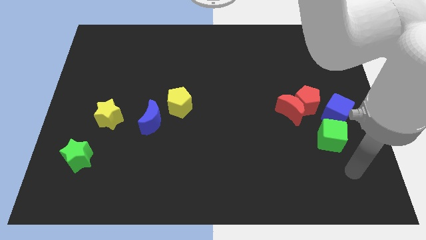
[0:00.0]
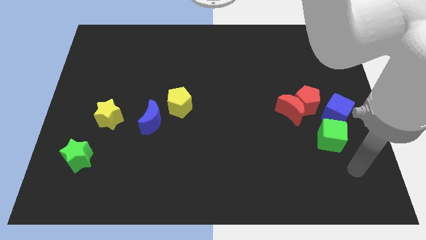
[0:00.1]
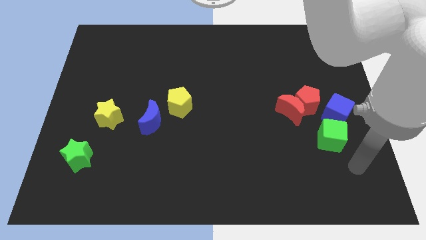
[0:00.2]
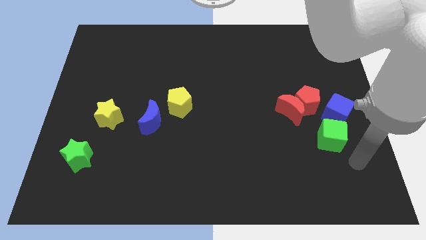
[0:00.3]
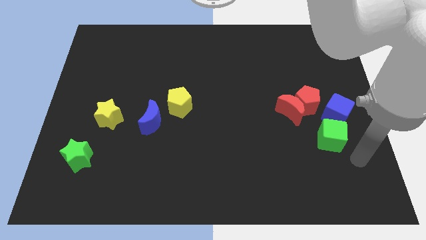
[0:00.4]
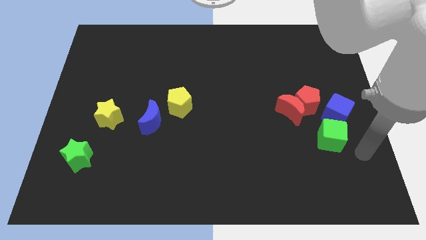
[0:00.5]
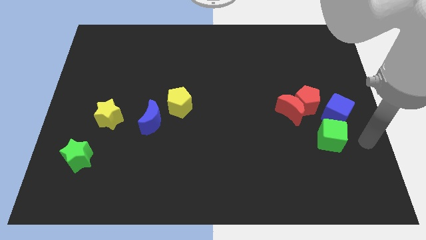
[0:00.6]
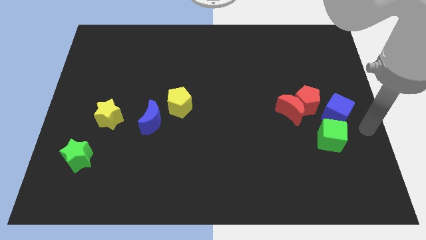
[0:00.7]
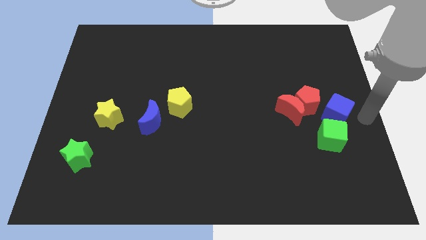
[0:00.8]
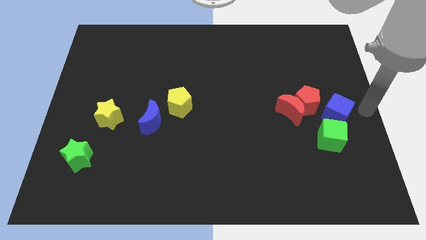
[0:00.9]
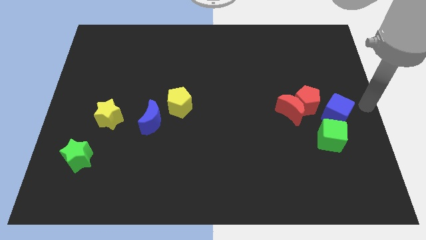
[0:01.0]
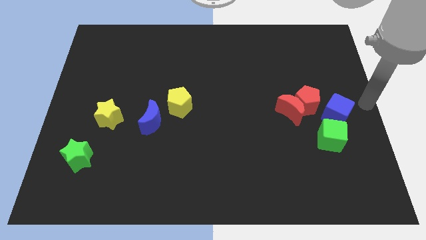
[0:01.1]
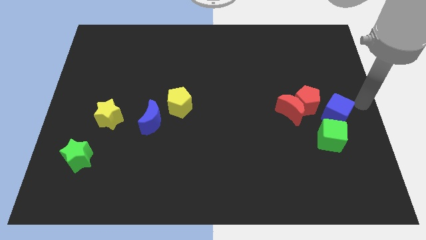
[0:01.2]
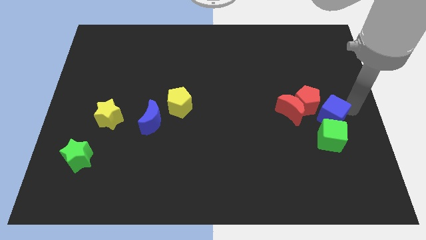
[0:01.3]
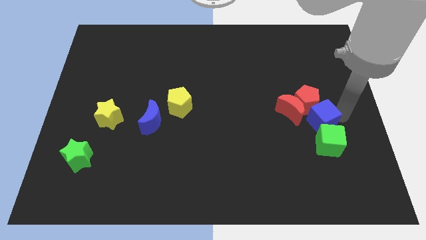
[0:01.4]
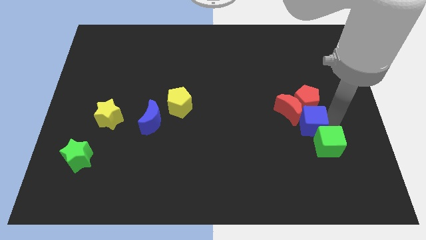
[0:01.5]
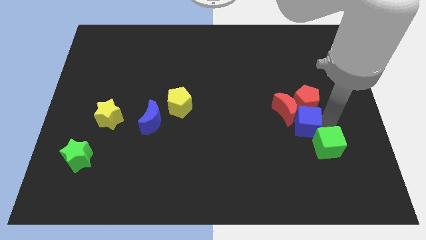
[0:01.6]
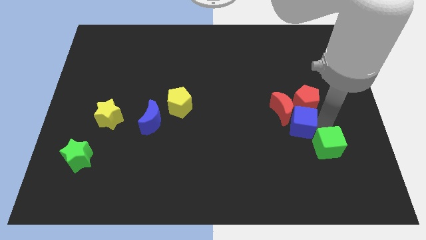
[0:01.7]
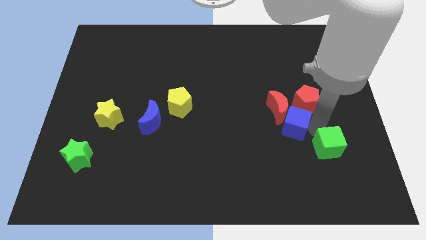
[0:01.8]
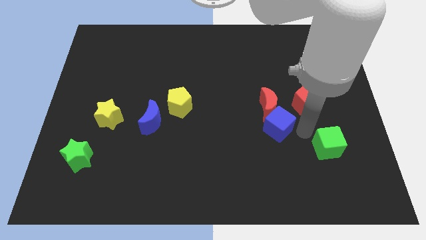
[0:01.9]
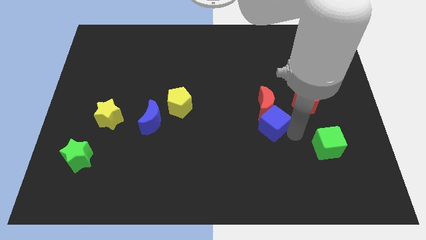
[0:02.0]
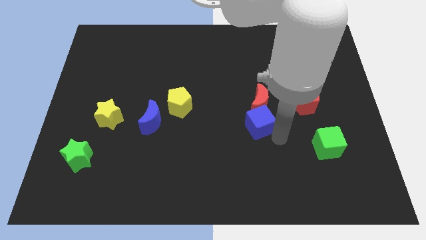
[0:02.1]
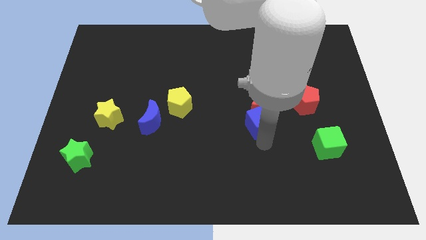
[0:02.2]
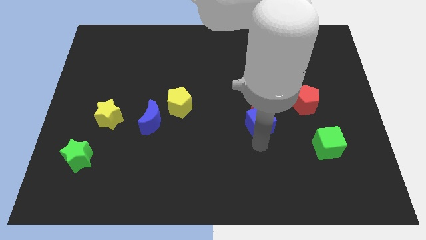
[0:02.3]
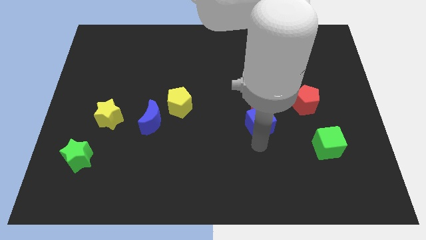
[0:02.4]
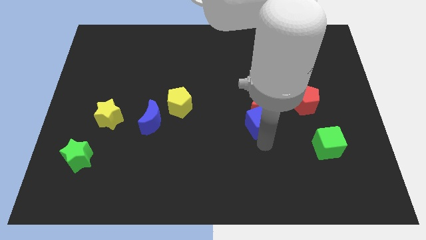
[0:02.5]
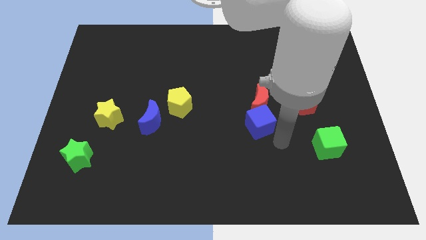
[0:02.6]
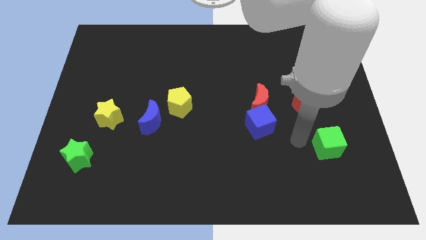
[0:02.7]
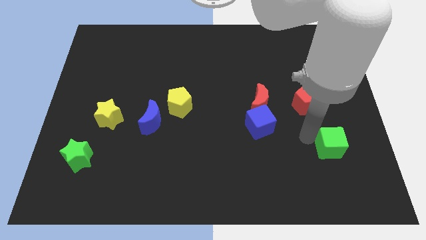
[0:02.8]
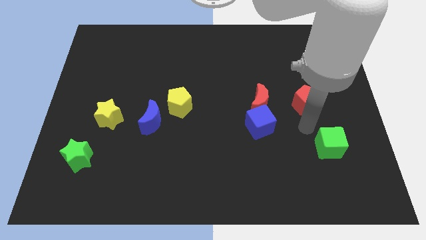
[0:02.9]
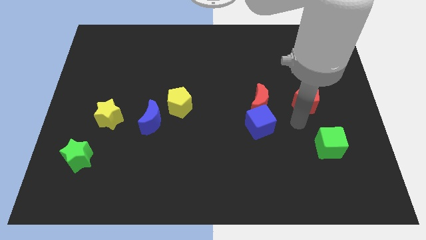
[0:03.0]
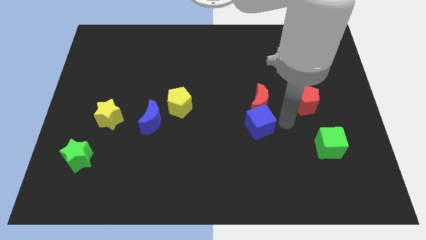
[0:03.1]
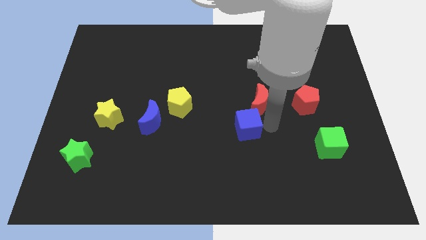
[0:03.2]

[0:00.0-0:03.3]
move the blue cube below the red moon

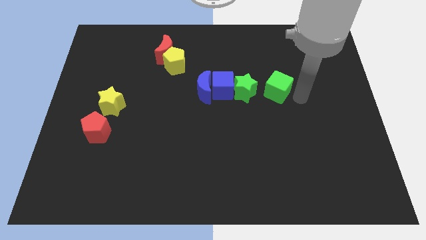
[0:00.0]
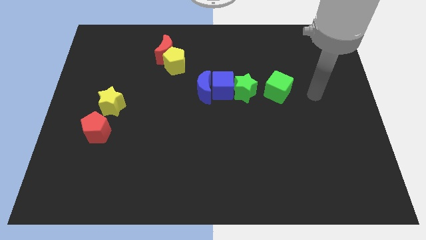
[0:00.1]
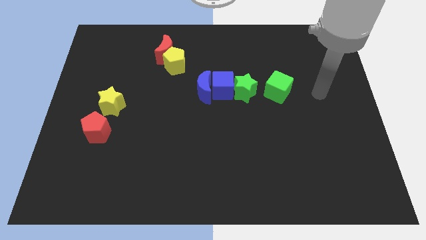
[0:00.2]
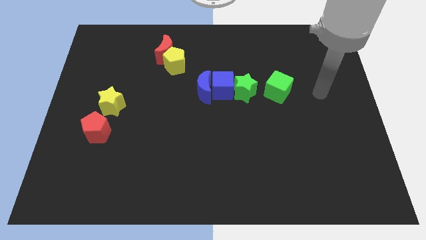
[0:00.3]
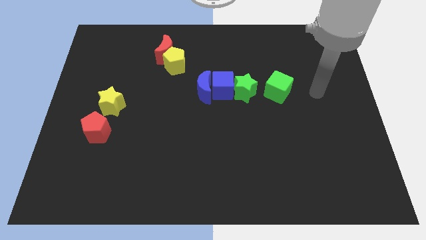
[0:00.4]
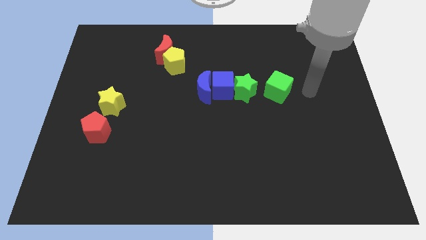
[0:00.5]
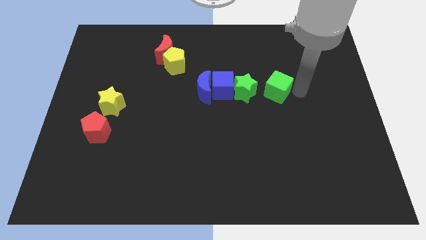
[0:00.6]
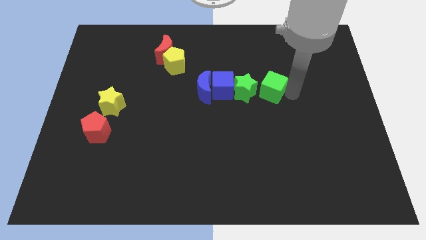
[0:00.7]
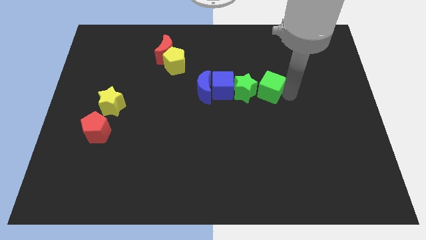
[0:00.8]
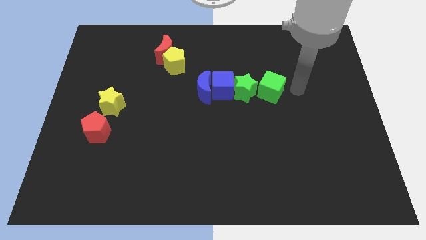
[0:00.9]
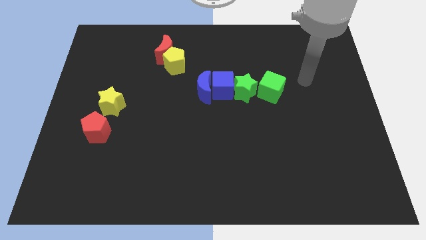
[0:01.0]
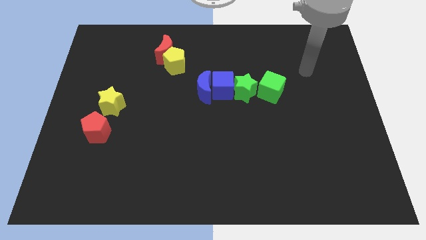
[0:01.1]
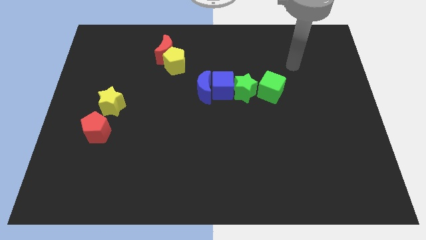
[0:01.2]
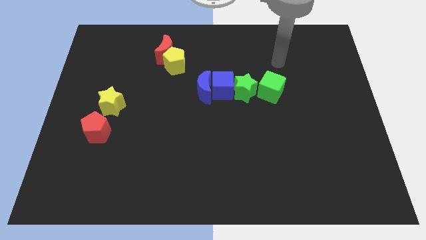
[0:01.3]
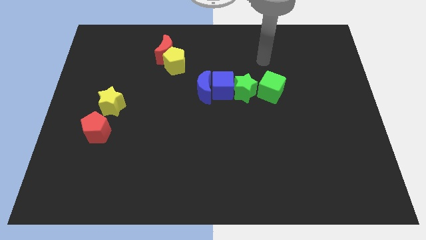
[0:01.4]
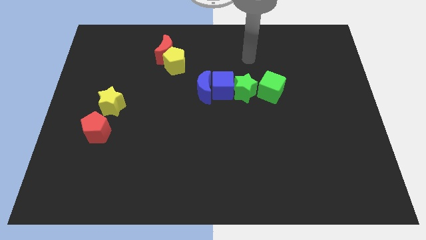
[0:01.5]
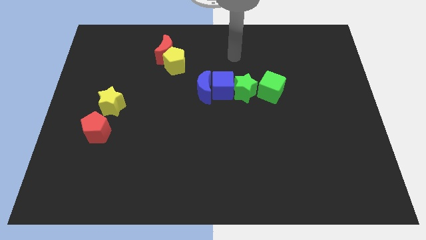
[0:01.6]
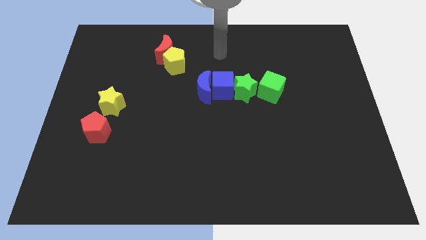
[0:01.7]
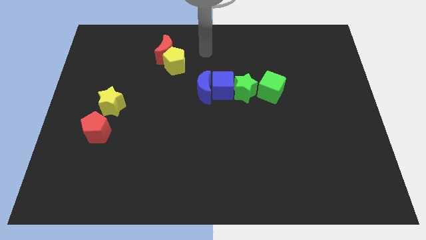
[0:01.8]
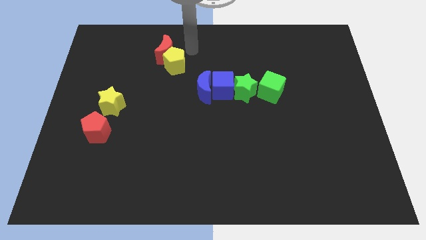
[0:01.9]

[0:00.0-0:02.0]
place the green cube to the right of the green star

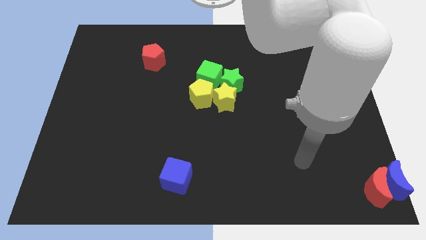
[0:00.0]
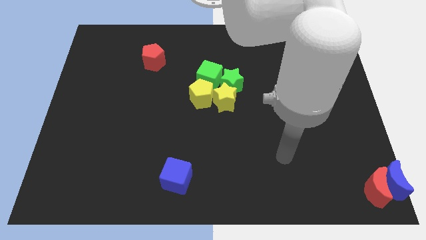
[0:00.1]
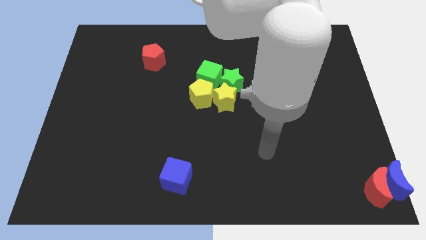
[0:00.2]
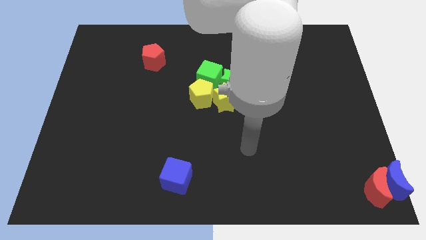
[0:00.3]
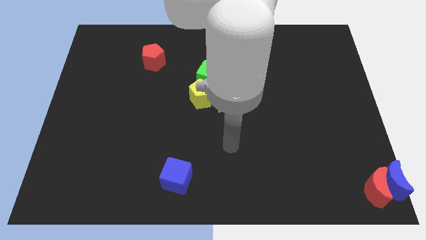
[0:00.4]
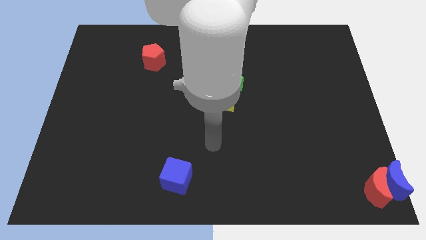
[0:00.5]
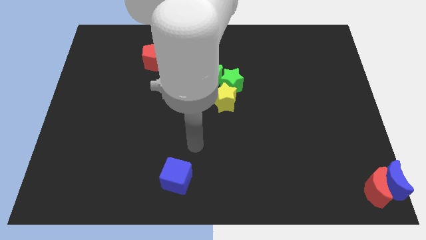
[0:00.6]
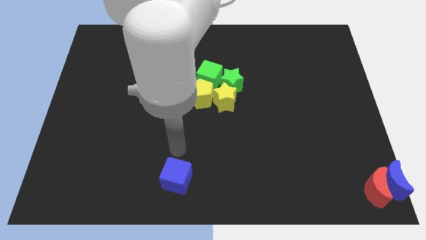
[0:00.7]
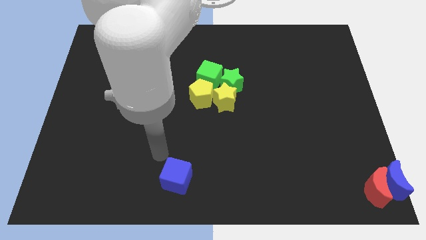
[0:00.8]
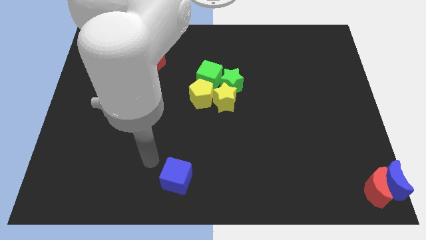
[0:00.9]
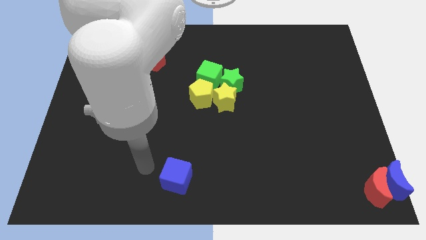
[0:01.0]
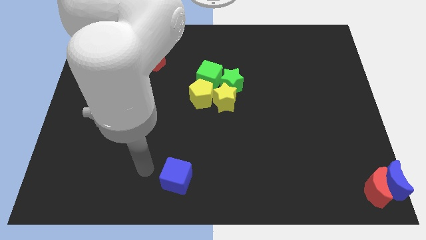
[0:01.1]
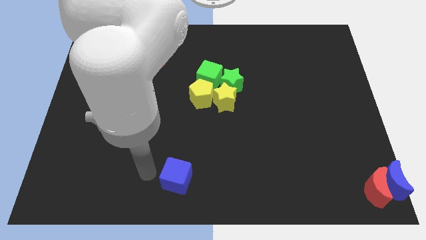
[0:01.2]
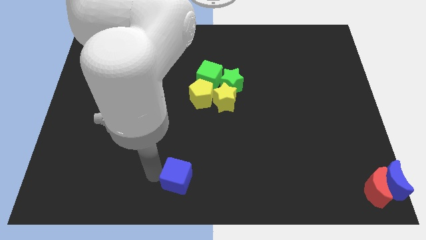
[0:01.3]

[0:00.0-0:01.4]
slide your arm to the left of the blue cube

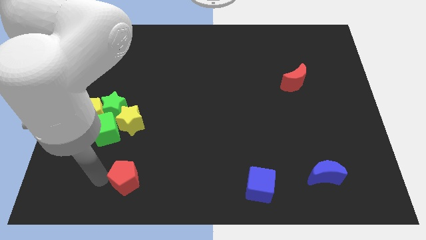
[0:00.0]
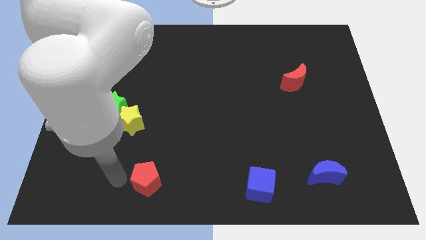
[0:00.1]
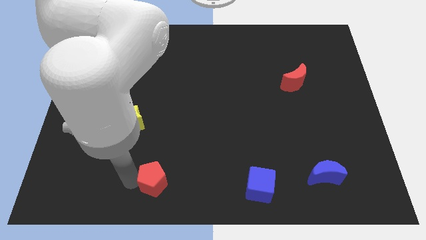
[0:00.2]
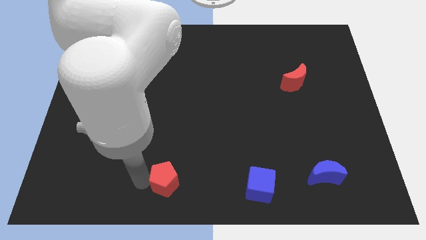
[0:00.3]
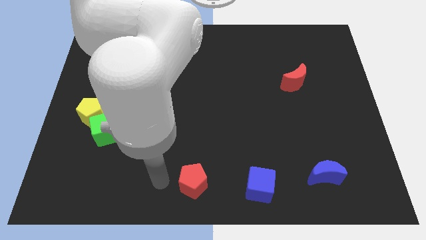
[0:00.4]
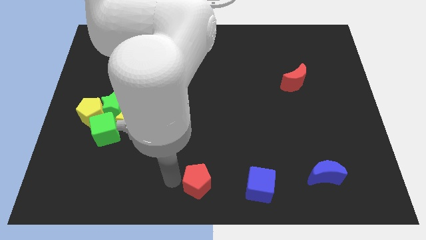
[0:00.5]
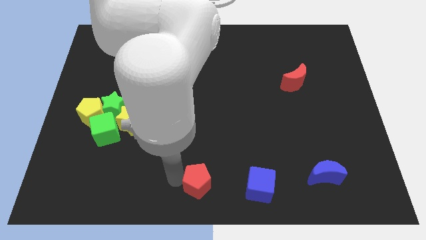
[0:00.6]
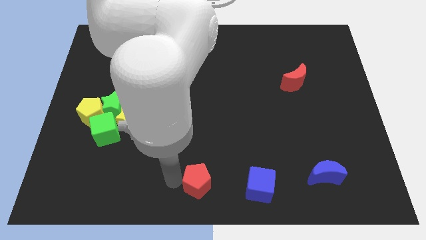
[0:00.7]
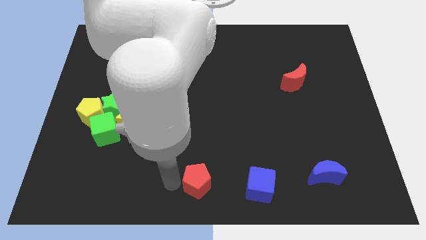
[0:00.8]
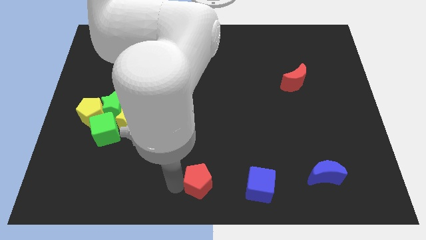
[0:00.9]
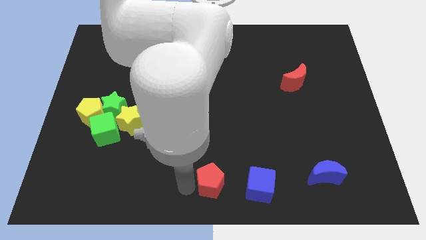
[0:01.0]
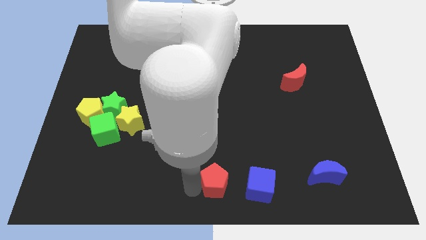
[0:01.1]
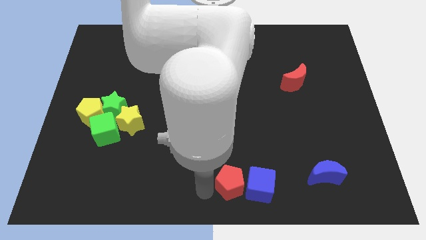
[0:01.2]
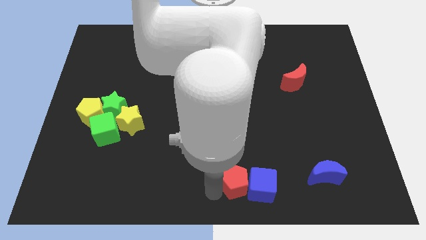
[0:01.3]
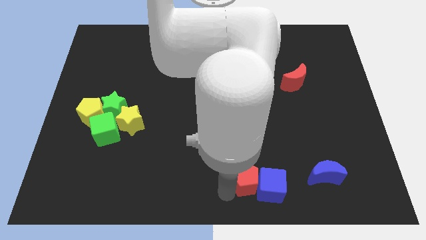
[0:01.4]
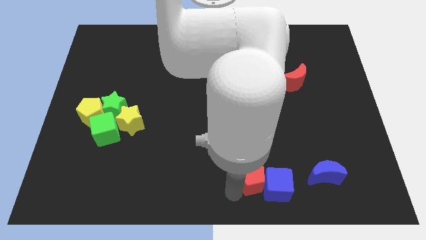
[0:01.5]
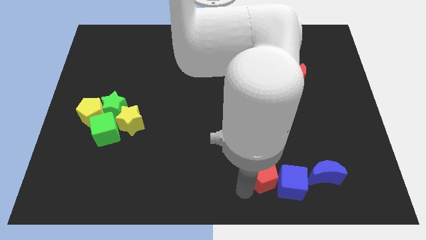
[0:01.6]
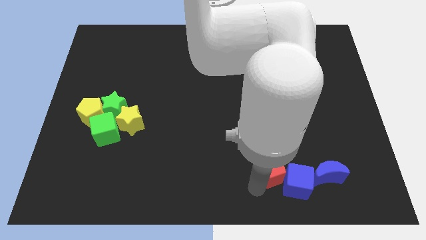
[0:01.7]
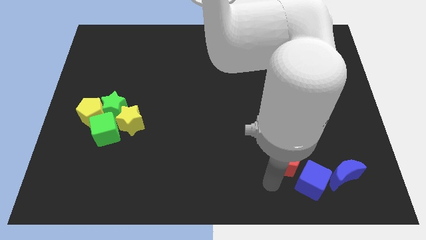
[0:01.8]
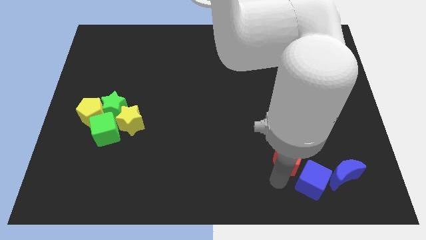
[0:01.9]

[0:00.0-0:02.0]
move the red red pentagon to the right side of the blue cube

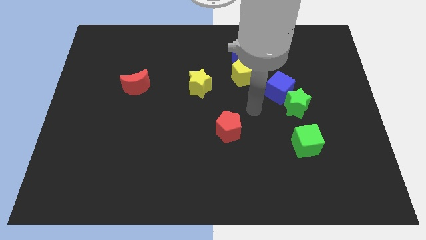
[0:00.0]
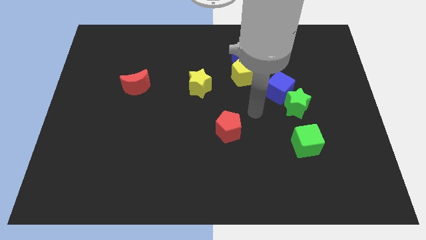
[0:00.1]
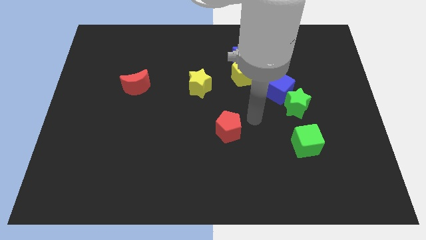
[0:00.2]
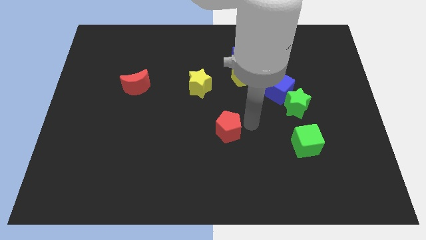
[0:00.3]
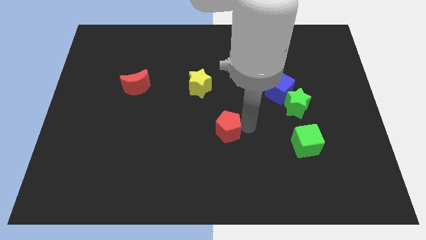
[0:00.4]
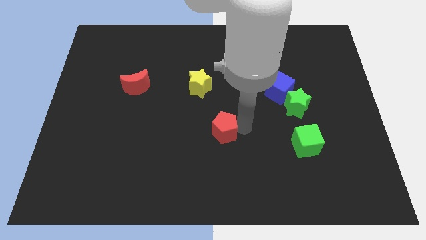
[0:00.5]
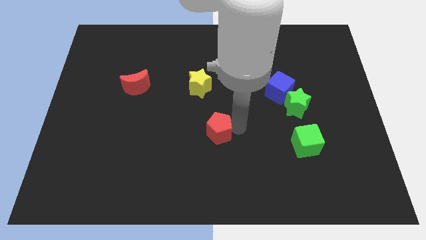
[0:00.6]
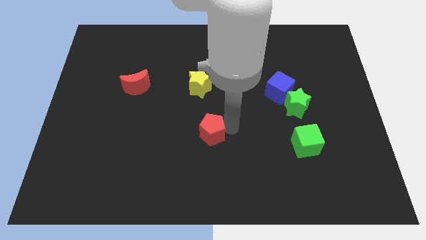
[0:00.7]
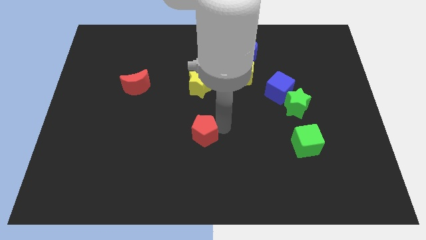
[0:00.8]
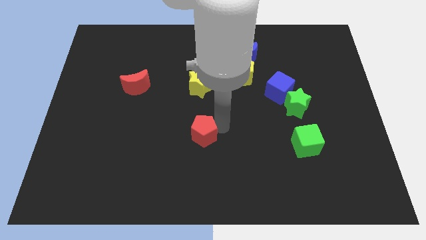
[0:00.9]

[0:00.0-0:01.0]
move the red pentagon below the yellow star
